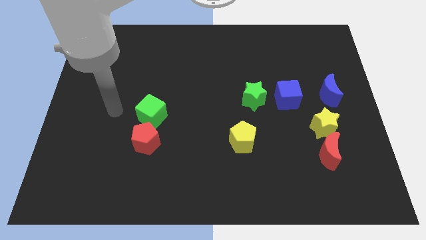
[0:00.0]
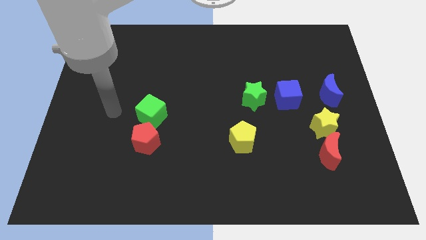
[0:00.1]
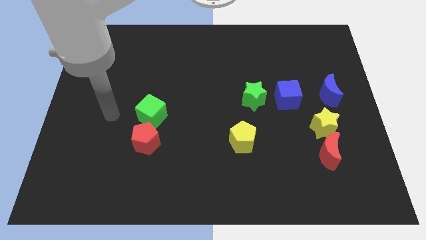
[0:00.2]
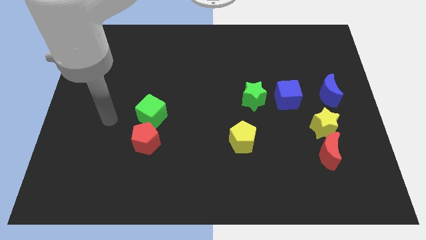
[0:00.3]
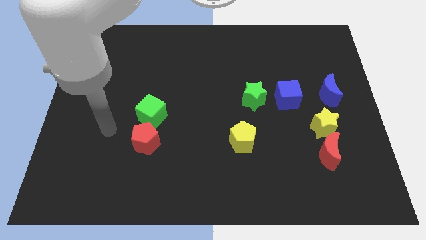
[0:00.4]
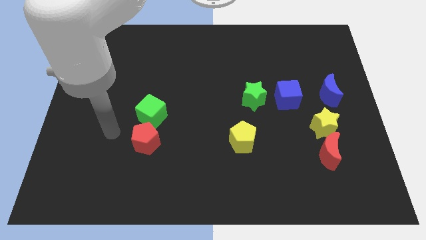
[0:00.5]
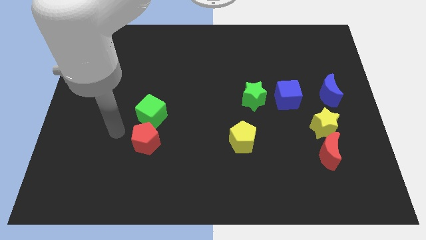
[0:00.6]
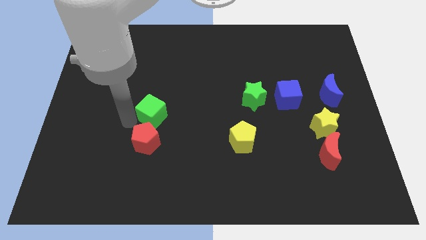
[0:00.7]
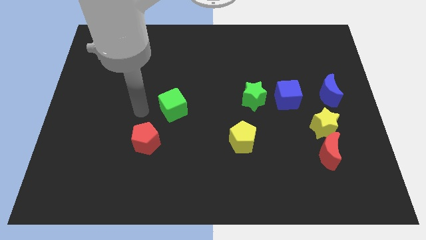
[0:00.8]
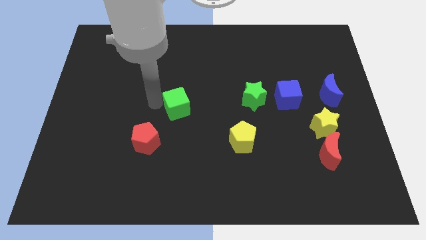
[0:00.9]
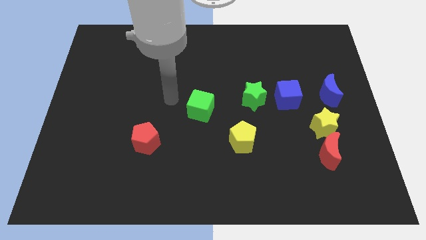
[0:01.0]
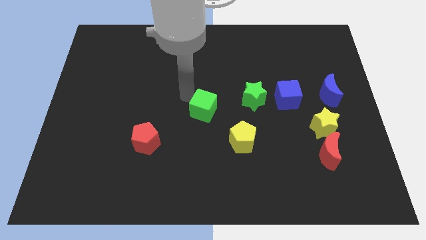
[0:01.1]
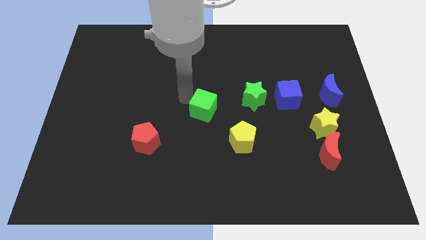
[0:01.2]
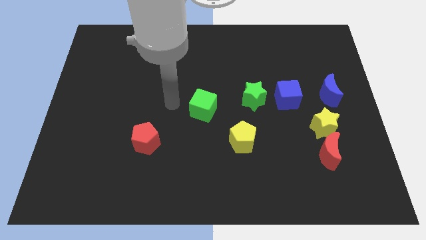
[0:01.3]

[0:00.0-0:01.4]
place the green cube at the center of the board

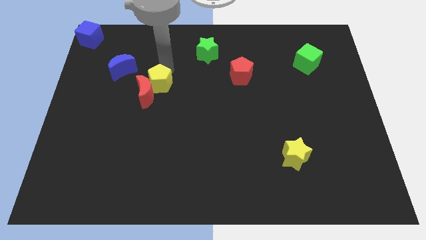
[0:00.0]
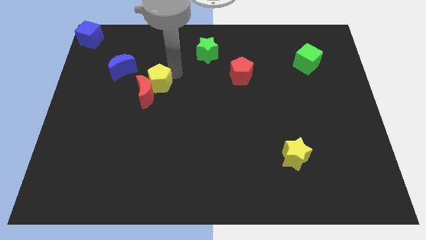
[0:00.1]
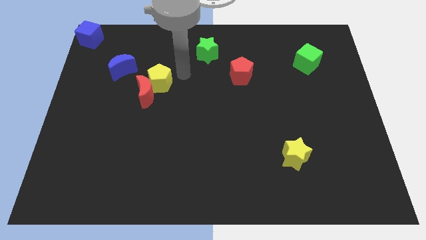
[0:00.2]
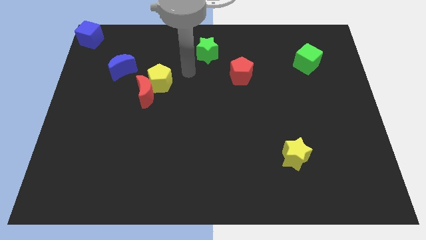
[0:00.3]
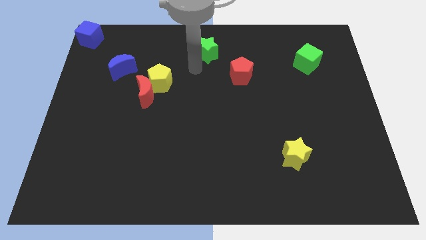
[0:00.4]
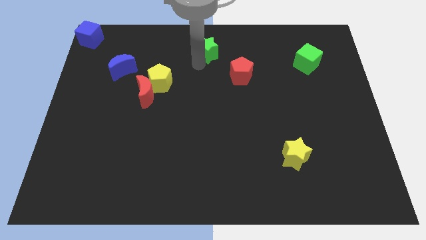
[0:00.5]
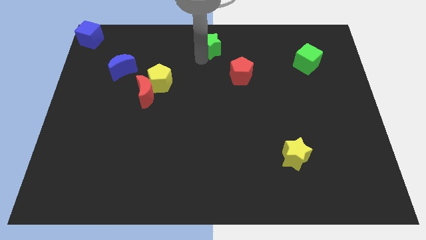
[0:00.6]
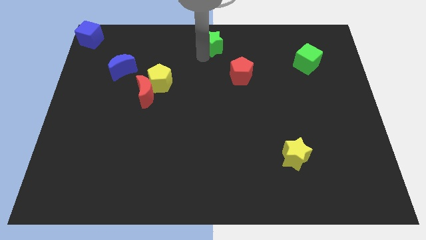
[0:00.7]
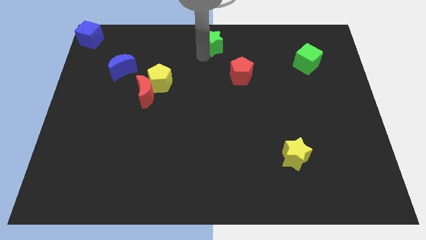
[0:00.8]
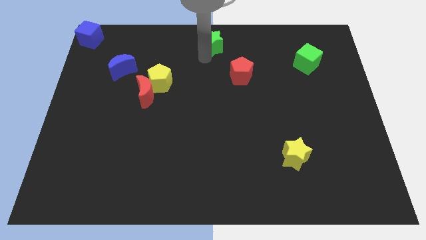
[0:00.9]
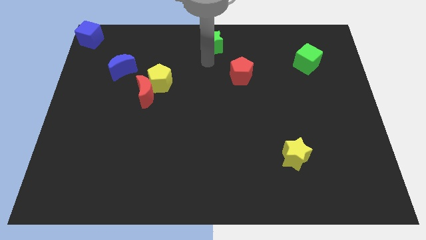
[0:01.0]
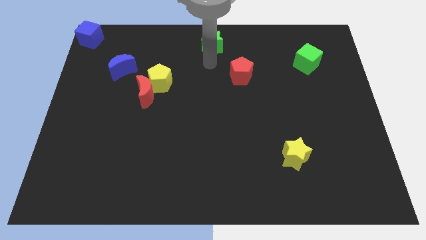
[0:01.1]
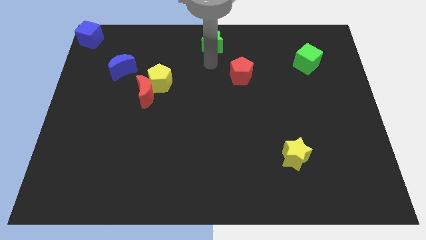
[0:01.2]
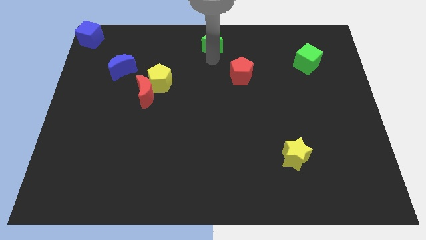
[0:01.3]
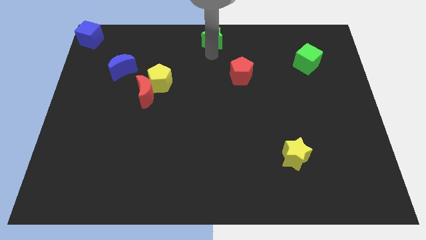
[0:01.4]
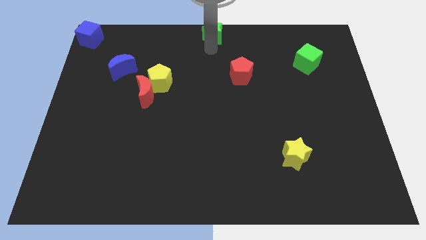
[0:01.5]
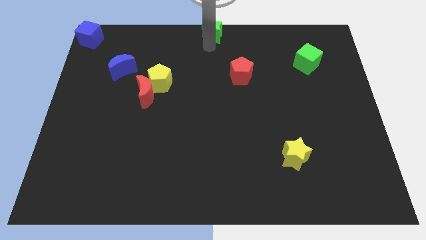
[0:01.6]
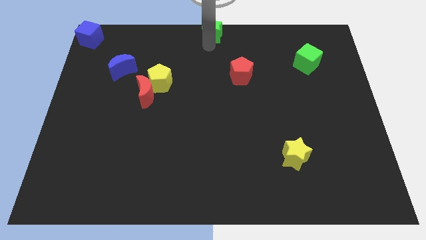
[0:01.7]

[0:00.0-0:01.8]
move the green star to the top center

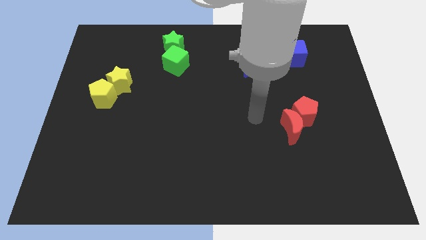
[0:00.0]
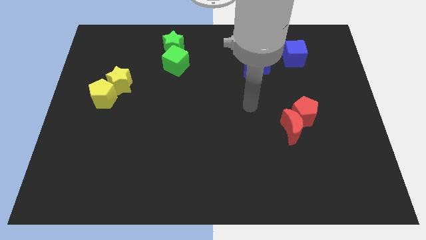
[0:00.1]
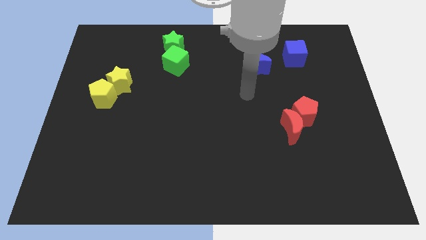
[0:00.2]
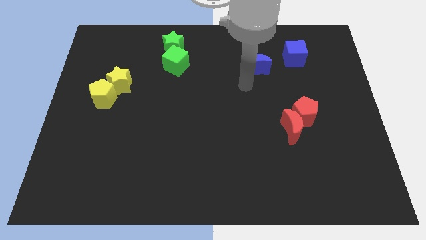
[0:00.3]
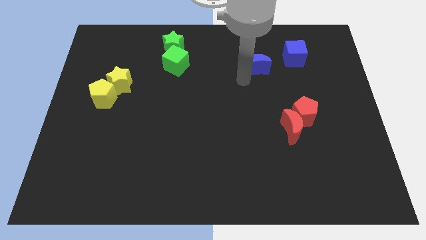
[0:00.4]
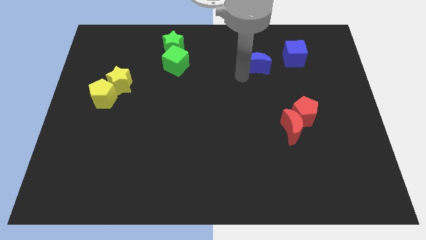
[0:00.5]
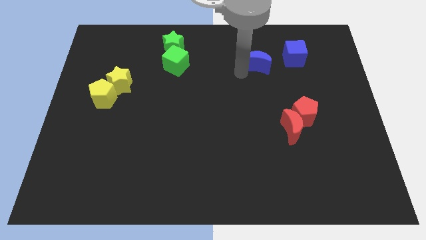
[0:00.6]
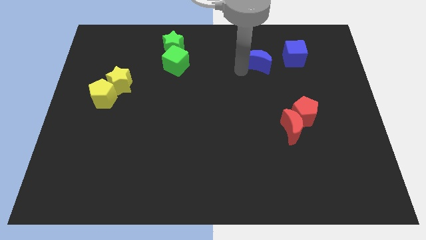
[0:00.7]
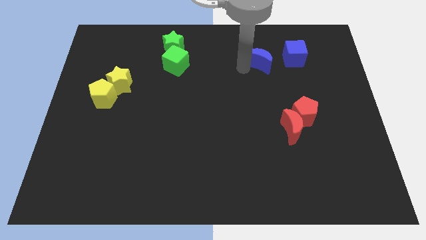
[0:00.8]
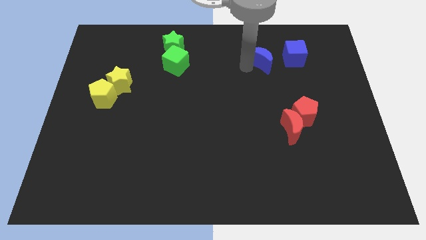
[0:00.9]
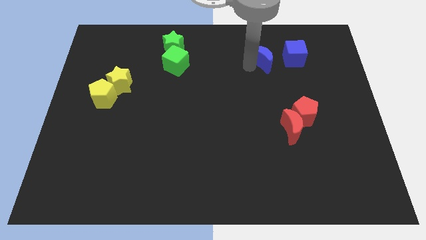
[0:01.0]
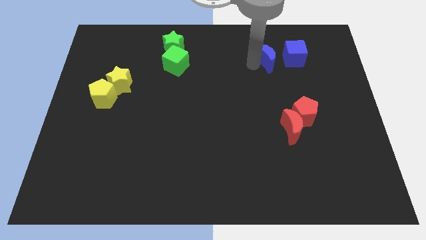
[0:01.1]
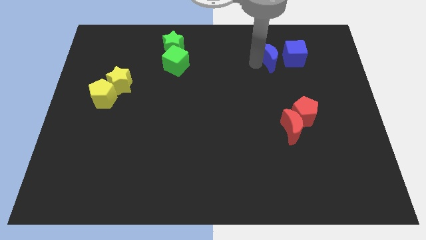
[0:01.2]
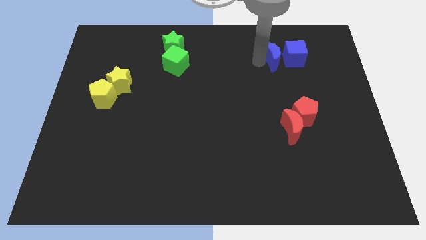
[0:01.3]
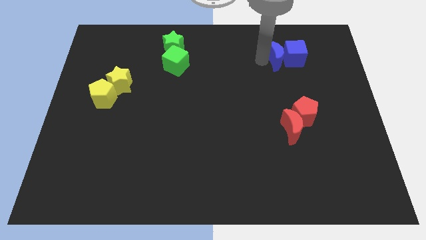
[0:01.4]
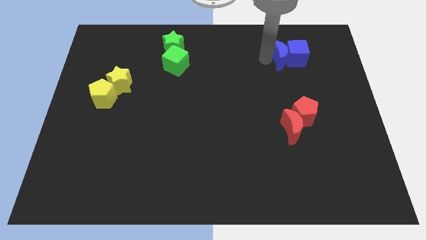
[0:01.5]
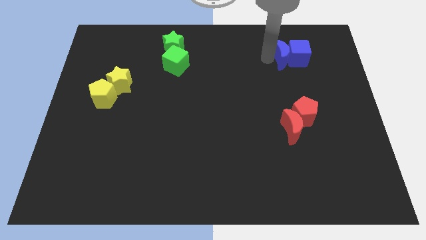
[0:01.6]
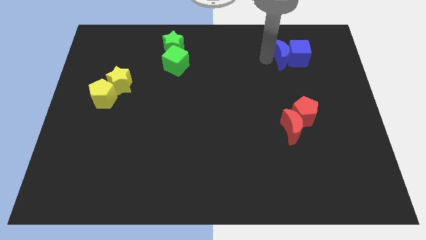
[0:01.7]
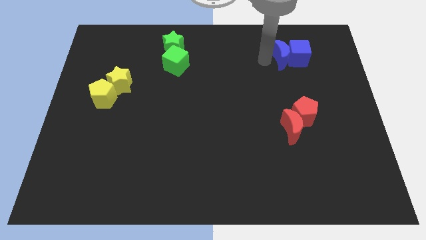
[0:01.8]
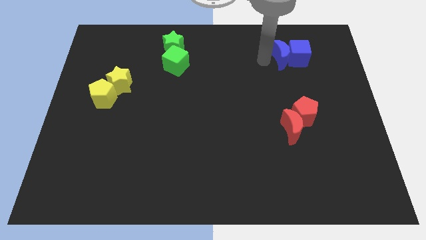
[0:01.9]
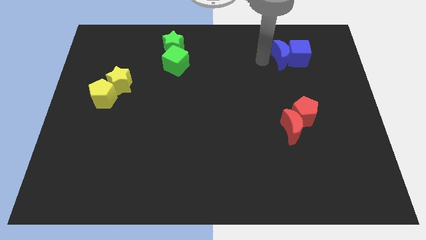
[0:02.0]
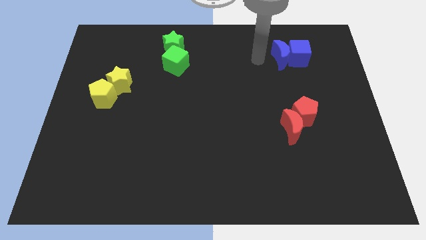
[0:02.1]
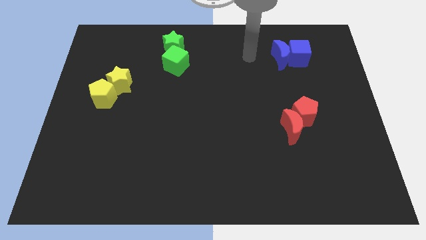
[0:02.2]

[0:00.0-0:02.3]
move the arm towards the blue crescent

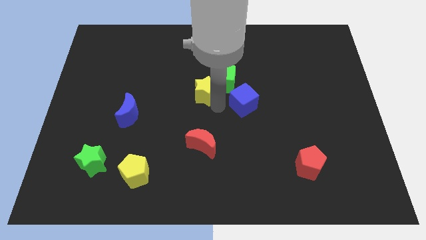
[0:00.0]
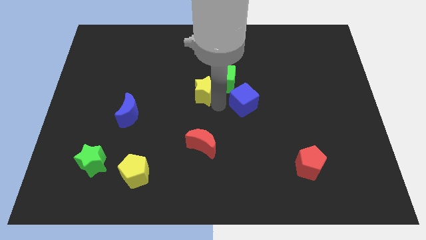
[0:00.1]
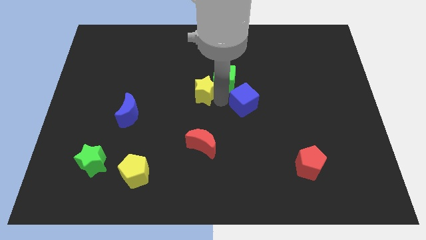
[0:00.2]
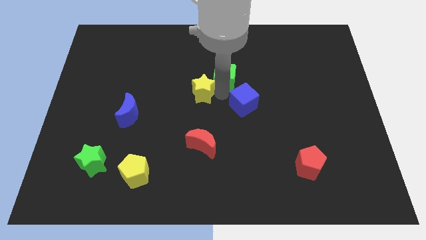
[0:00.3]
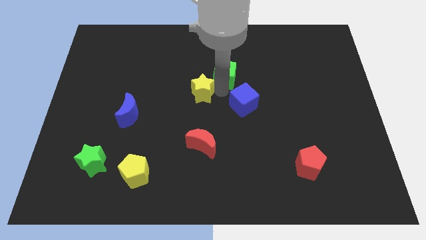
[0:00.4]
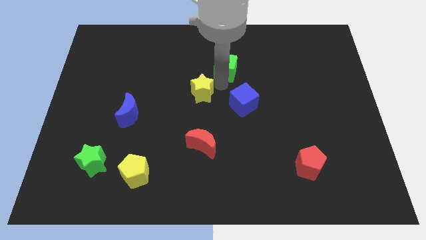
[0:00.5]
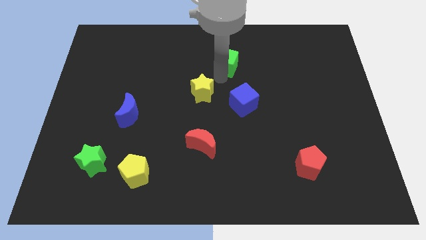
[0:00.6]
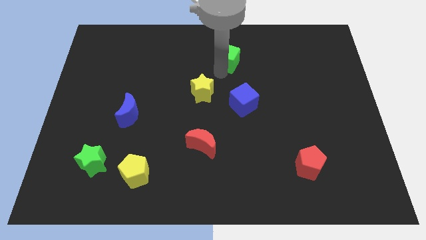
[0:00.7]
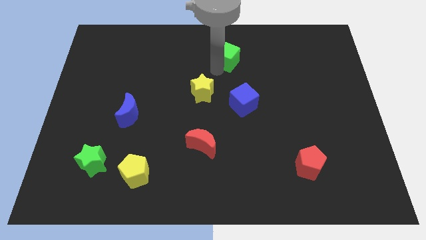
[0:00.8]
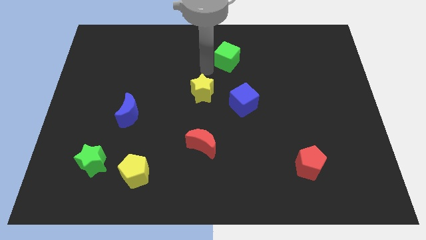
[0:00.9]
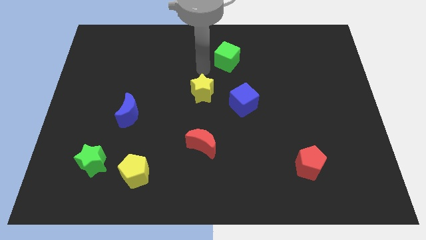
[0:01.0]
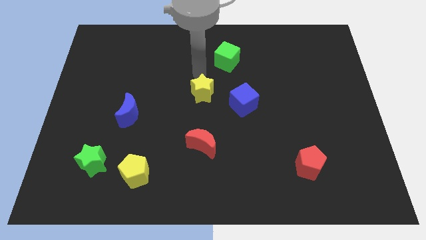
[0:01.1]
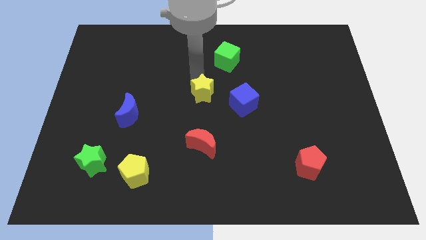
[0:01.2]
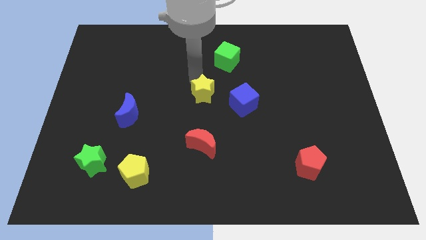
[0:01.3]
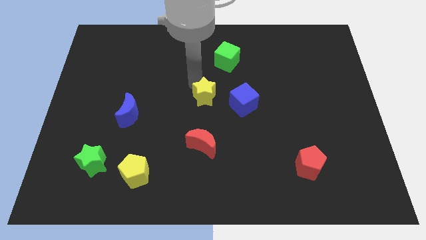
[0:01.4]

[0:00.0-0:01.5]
separate green cube from the yellow star

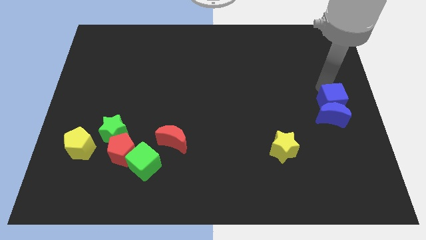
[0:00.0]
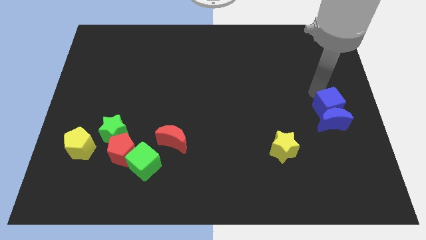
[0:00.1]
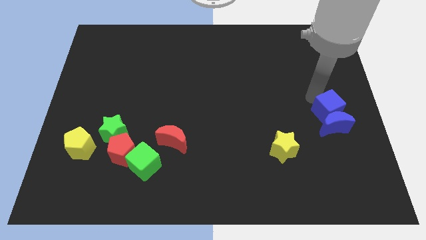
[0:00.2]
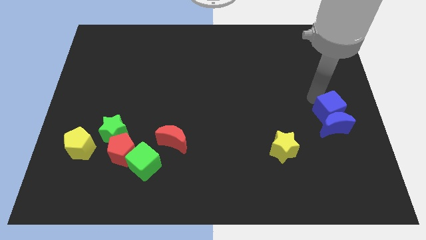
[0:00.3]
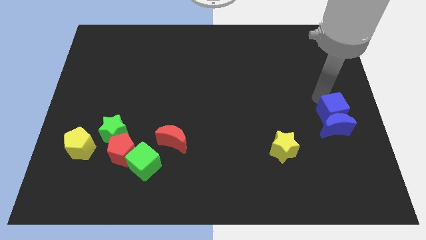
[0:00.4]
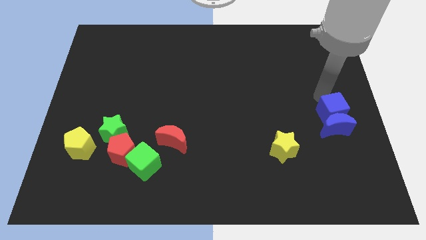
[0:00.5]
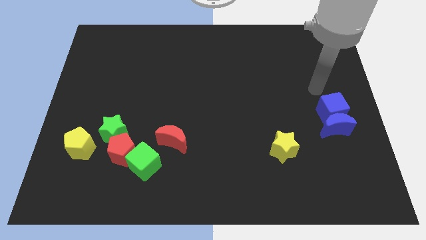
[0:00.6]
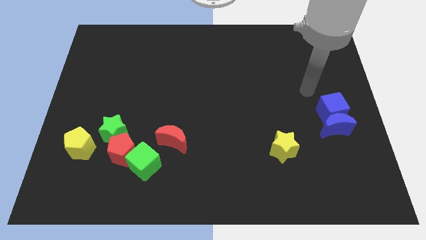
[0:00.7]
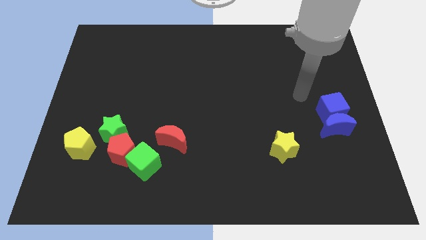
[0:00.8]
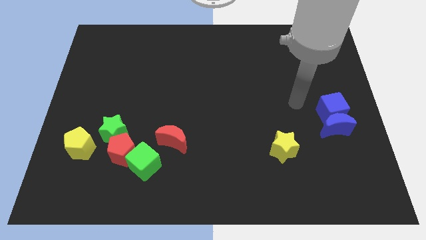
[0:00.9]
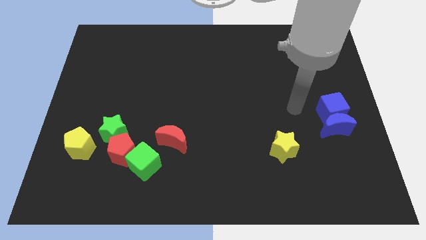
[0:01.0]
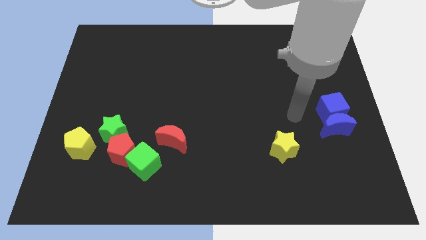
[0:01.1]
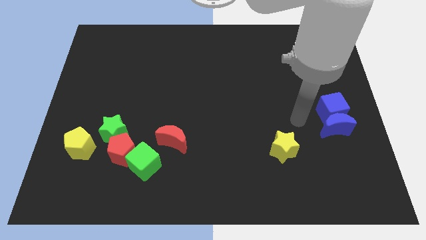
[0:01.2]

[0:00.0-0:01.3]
push blue cube in to blue moon

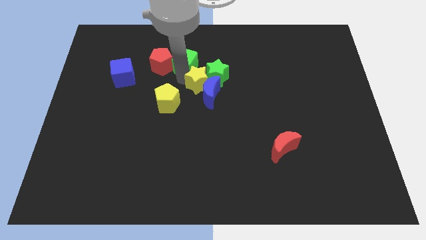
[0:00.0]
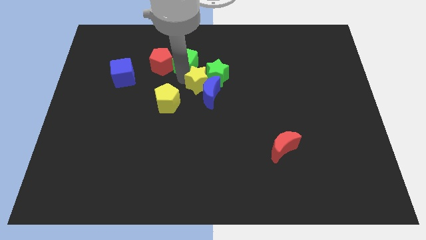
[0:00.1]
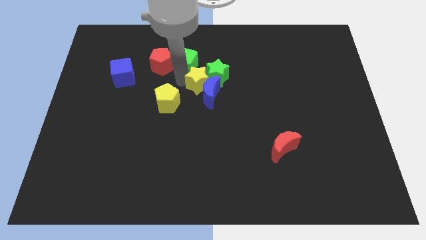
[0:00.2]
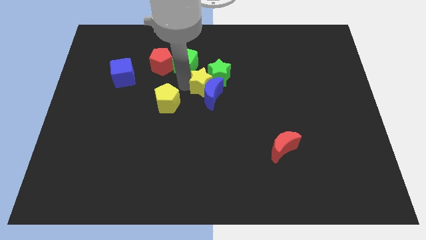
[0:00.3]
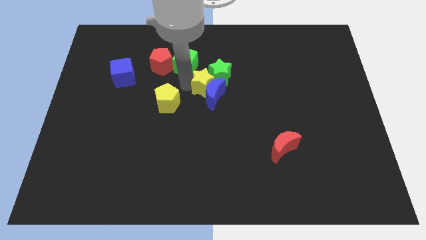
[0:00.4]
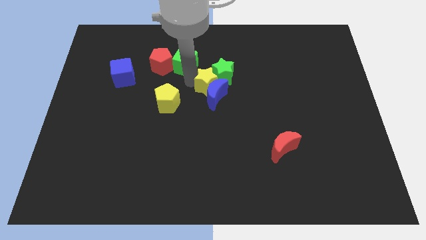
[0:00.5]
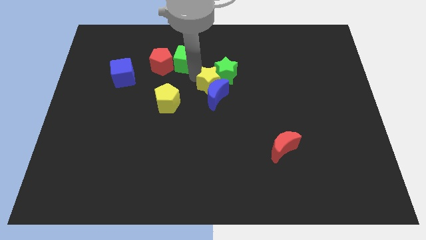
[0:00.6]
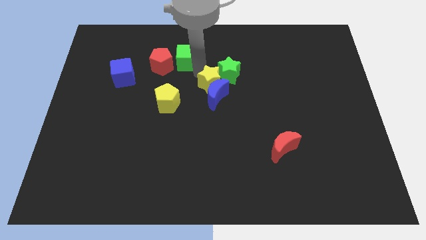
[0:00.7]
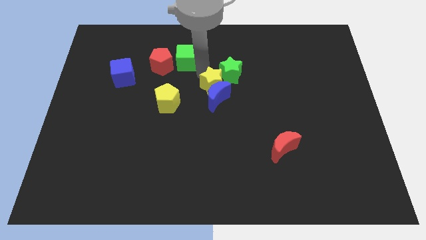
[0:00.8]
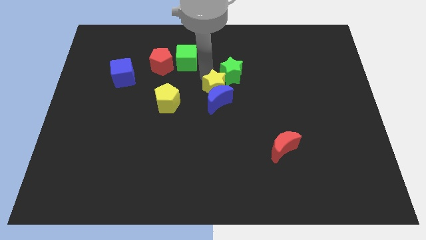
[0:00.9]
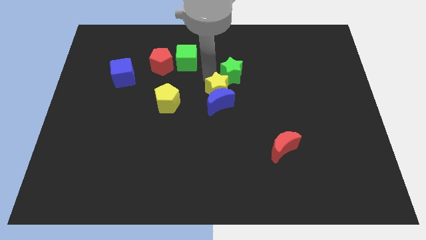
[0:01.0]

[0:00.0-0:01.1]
push the yellow star into the blue moon
